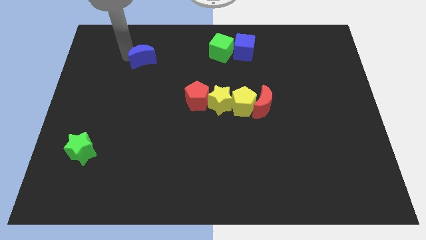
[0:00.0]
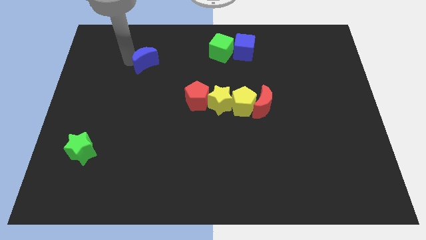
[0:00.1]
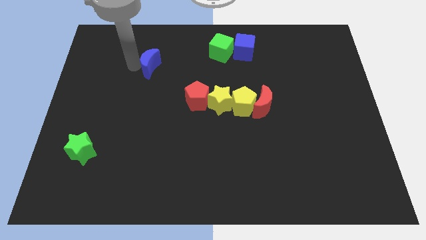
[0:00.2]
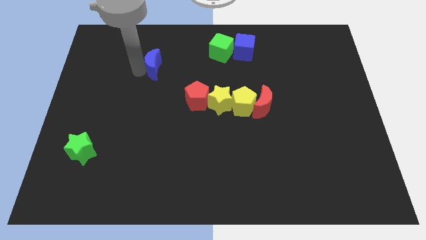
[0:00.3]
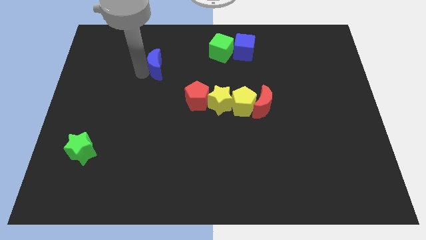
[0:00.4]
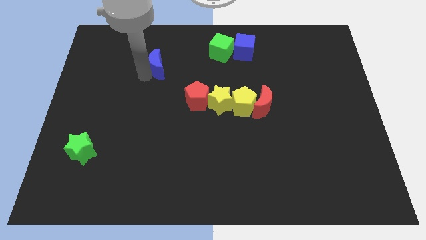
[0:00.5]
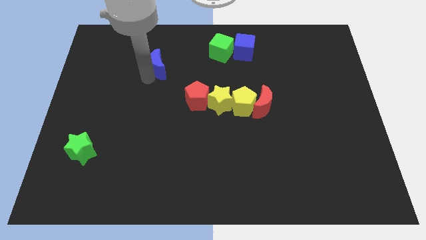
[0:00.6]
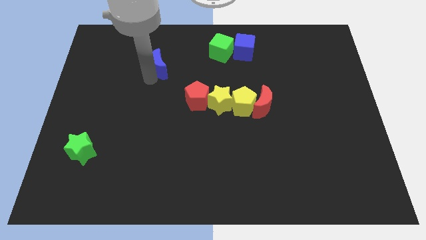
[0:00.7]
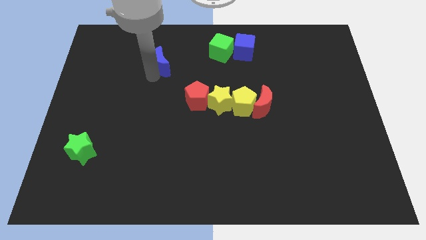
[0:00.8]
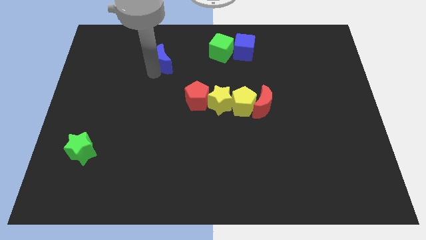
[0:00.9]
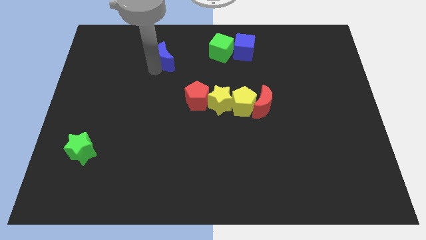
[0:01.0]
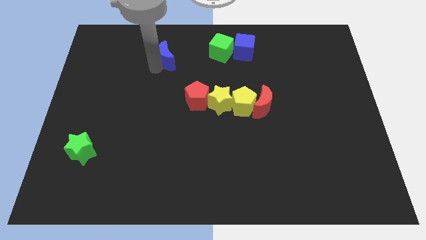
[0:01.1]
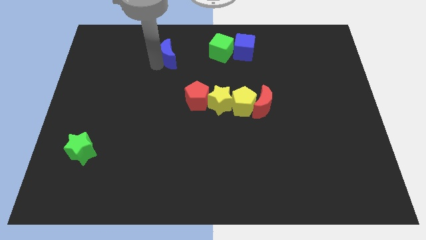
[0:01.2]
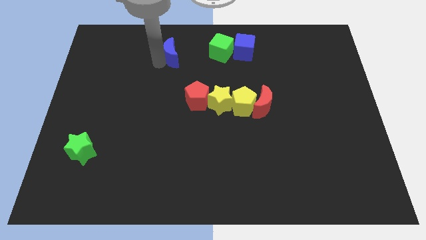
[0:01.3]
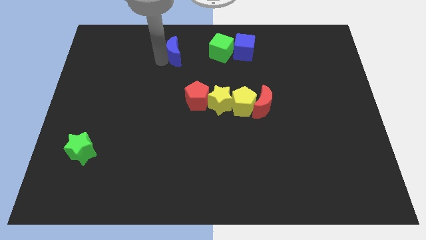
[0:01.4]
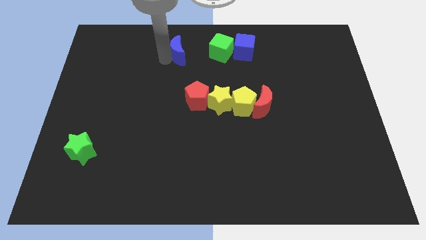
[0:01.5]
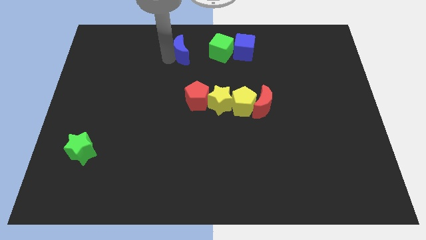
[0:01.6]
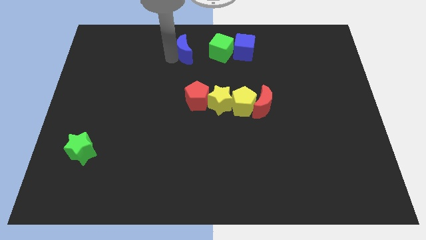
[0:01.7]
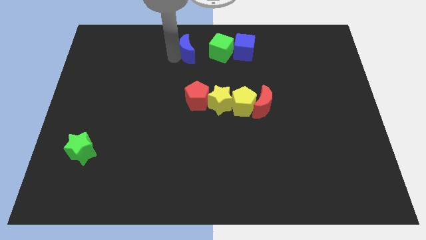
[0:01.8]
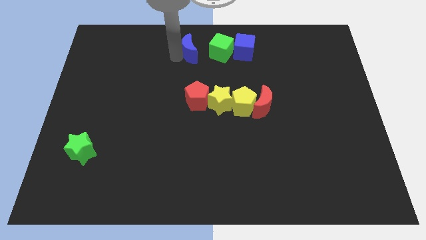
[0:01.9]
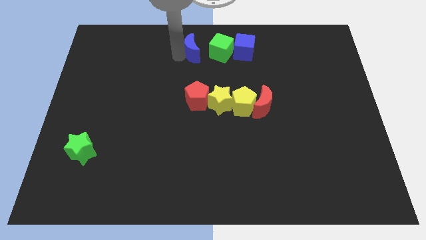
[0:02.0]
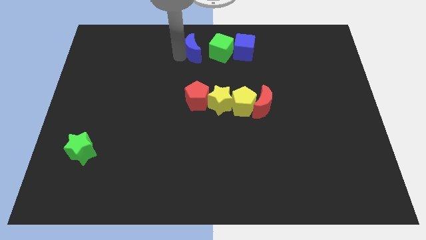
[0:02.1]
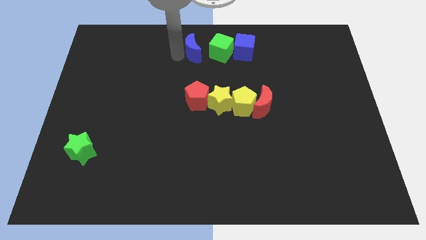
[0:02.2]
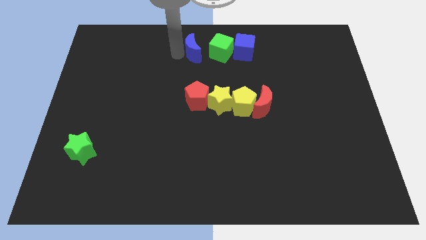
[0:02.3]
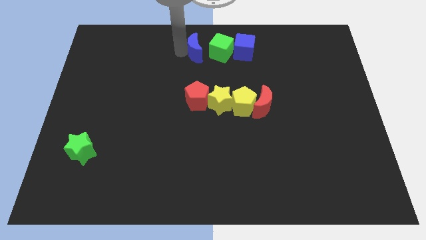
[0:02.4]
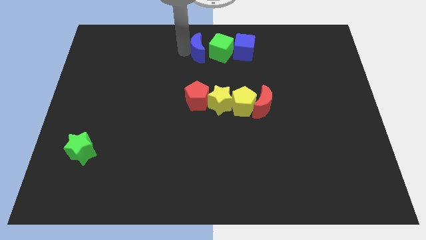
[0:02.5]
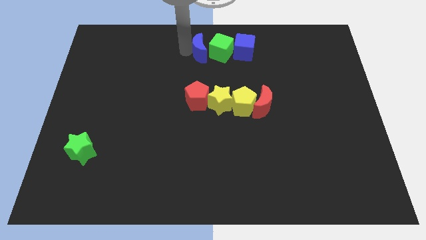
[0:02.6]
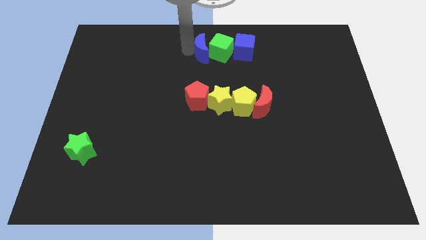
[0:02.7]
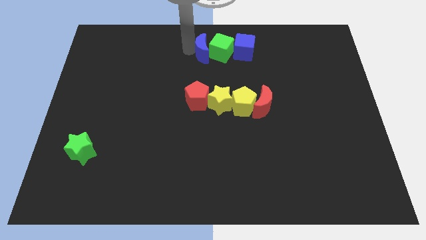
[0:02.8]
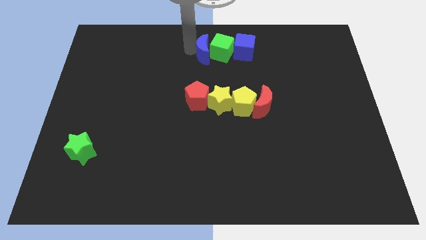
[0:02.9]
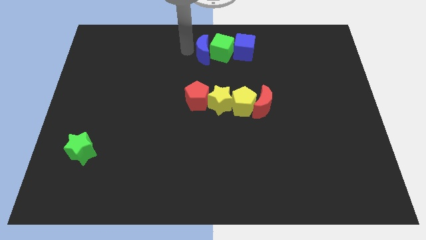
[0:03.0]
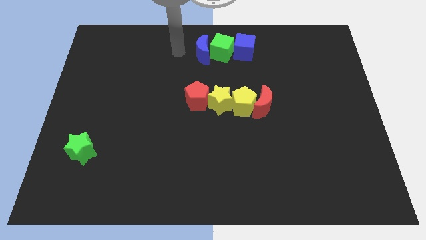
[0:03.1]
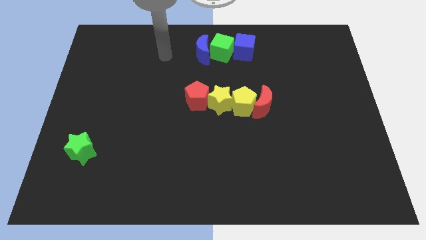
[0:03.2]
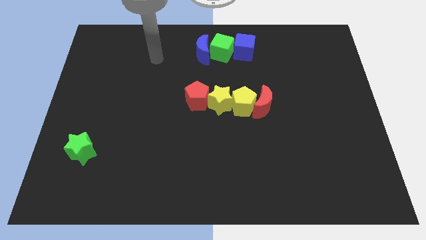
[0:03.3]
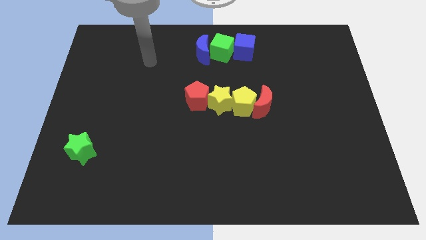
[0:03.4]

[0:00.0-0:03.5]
move blue crescent into green cube

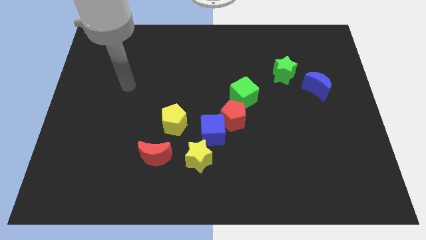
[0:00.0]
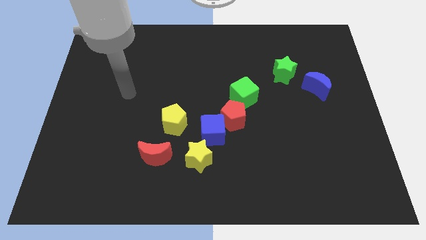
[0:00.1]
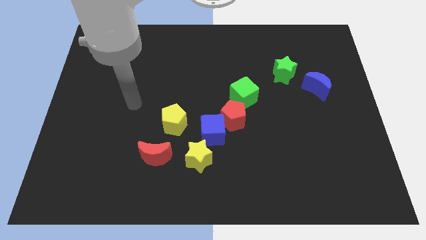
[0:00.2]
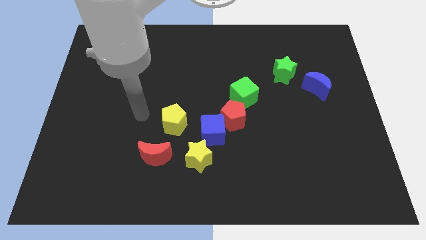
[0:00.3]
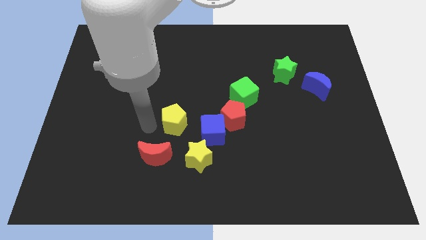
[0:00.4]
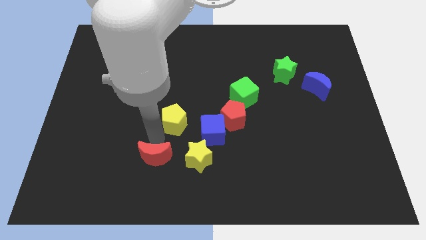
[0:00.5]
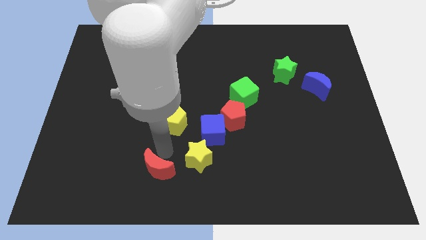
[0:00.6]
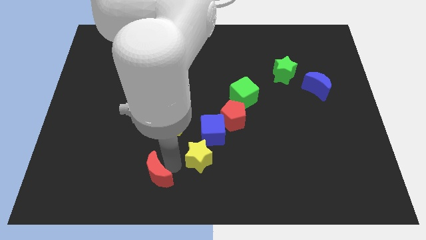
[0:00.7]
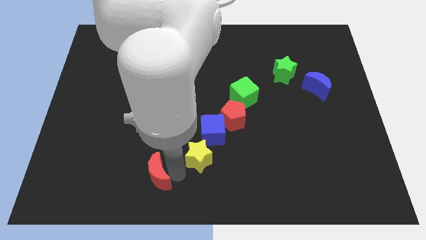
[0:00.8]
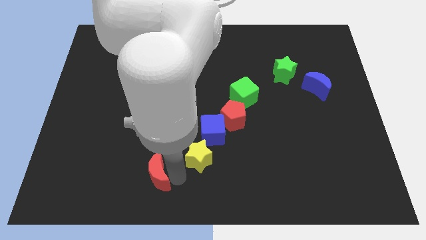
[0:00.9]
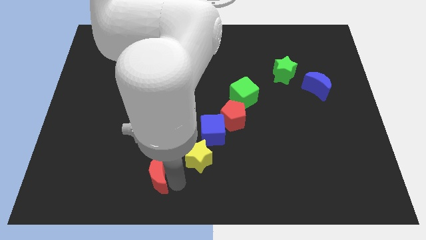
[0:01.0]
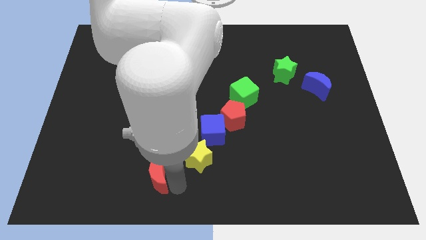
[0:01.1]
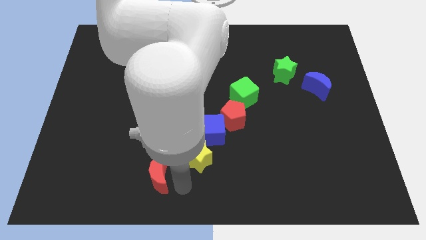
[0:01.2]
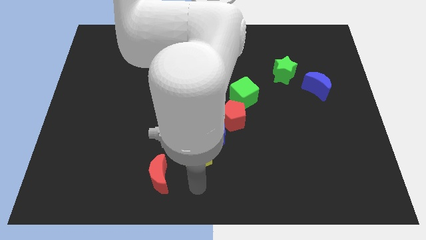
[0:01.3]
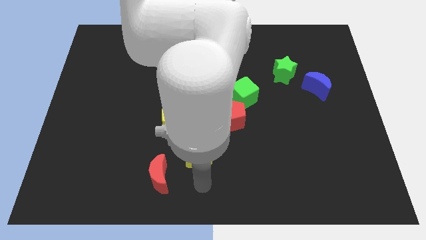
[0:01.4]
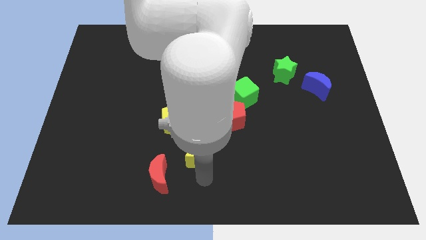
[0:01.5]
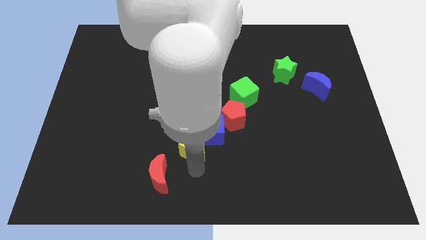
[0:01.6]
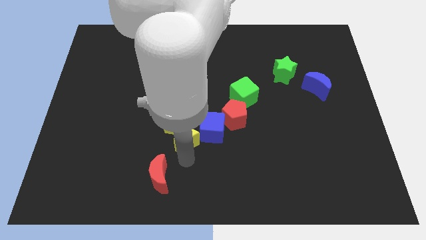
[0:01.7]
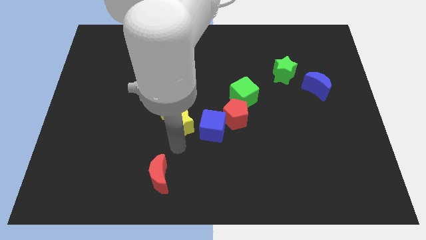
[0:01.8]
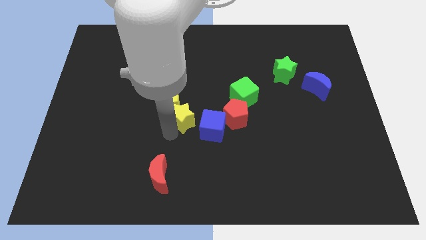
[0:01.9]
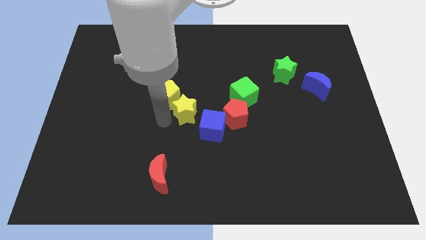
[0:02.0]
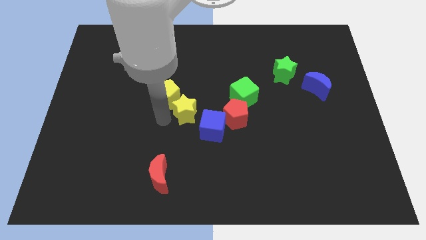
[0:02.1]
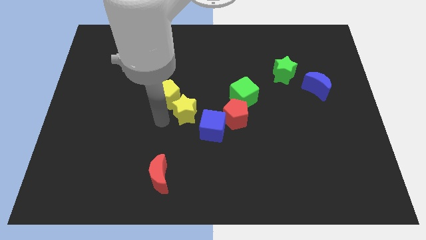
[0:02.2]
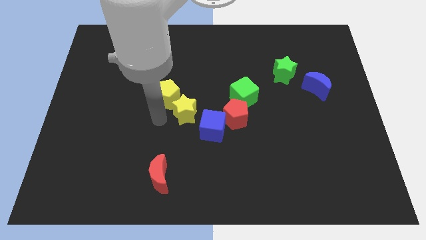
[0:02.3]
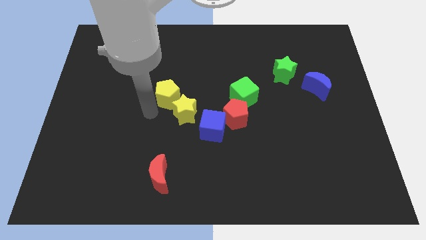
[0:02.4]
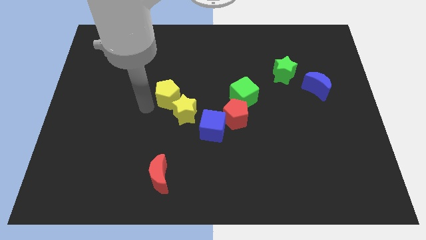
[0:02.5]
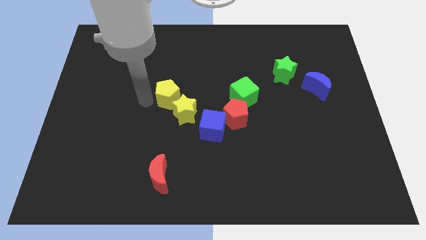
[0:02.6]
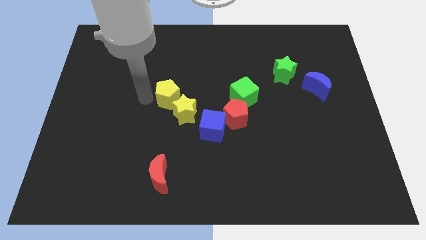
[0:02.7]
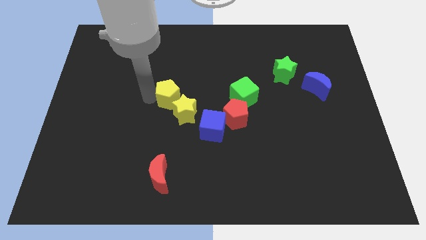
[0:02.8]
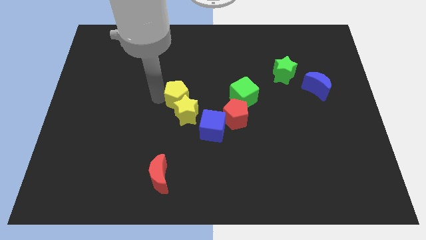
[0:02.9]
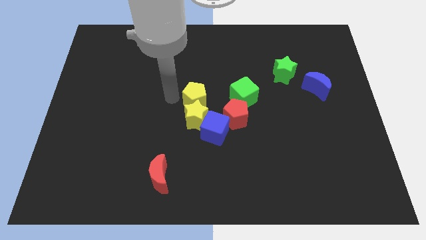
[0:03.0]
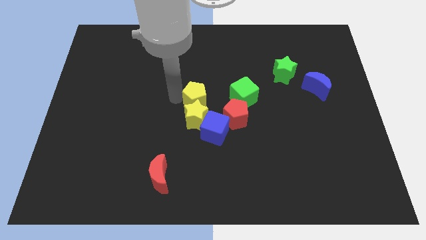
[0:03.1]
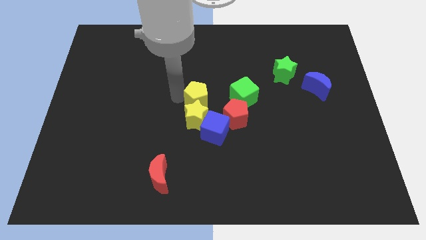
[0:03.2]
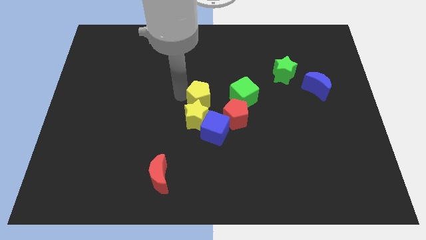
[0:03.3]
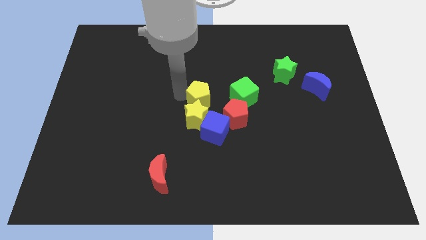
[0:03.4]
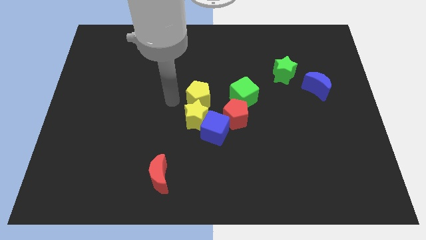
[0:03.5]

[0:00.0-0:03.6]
move the yellow blocks towards the center of the board

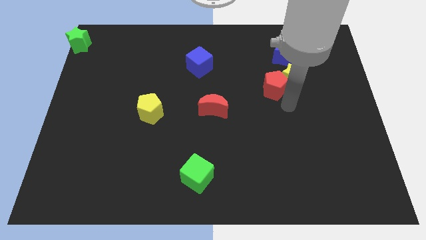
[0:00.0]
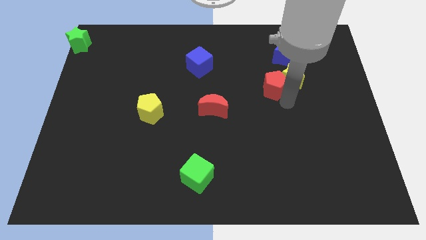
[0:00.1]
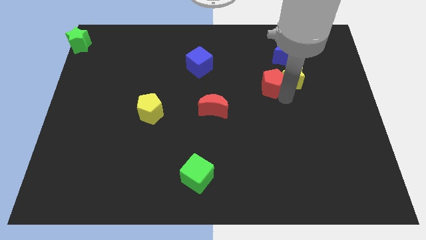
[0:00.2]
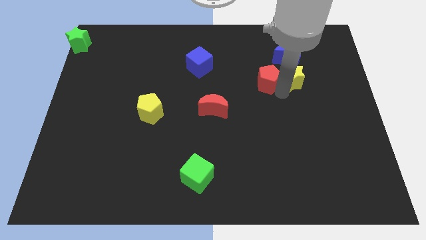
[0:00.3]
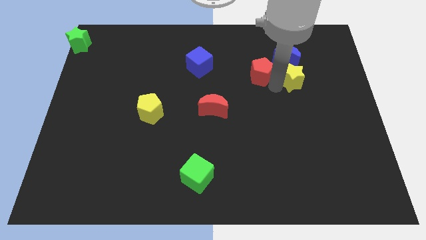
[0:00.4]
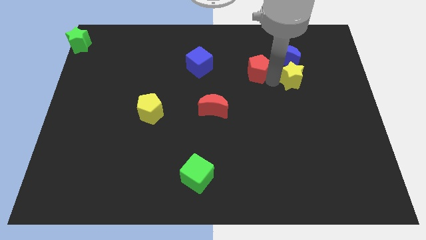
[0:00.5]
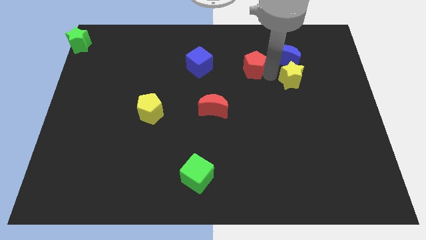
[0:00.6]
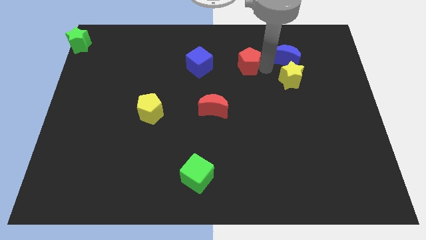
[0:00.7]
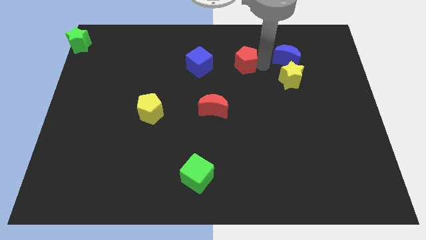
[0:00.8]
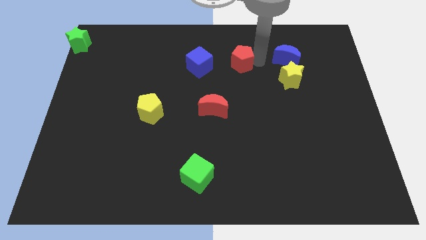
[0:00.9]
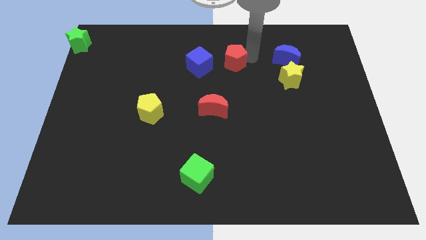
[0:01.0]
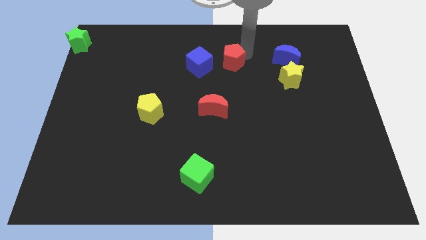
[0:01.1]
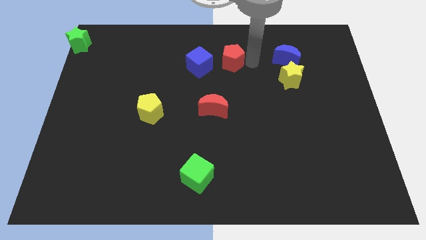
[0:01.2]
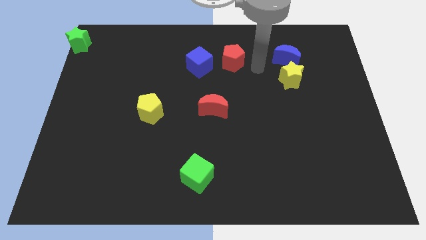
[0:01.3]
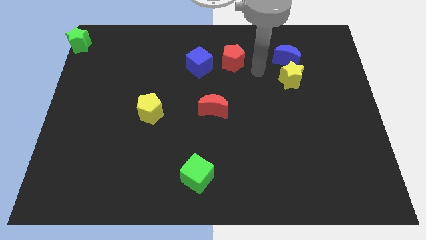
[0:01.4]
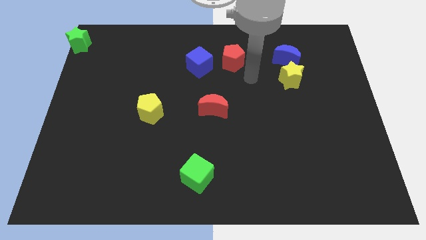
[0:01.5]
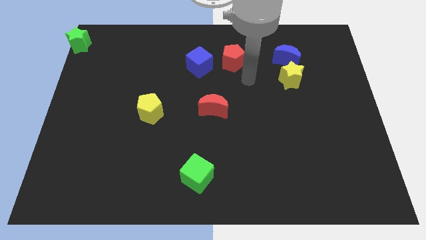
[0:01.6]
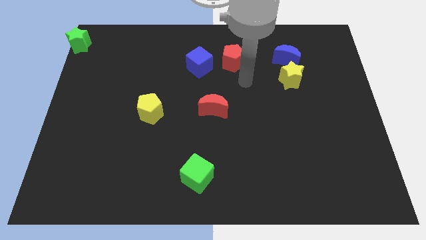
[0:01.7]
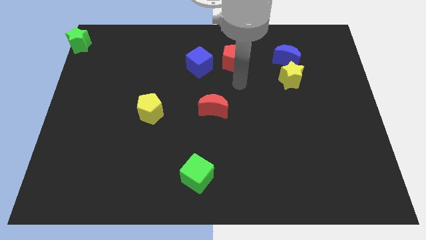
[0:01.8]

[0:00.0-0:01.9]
push red pentagon towards the blue cube
